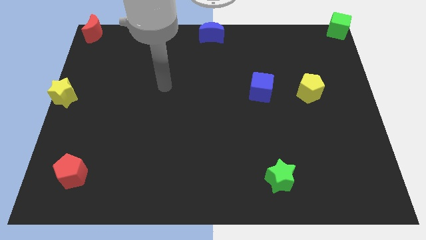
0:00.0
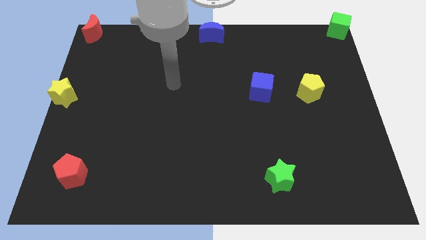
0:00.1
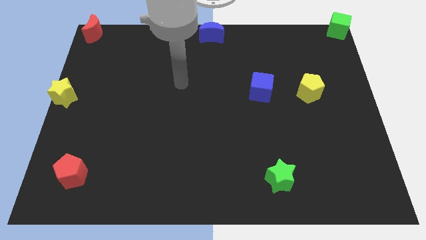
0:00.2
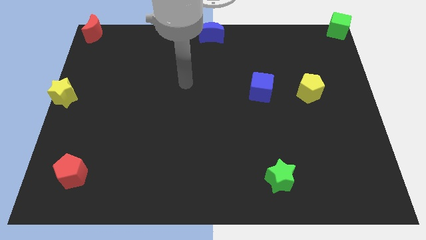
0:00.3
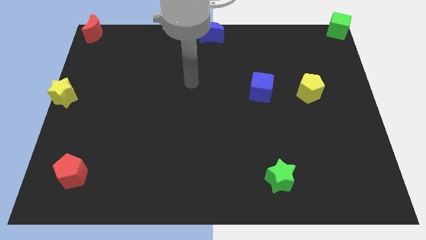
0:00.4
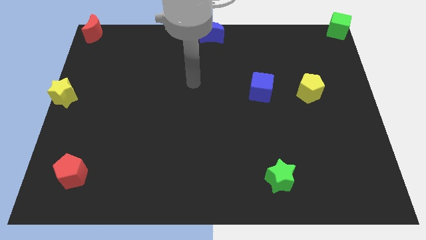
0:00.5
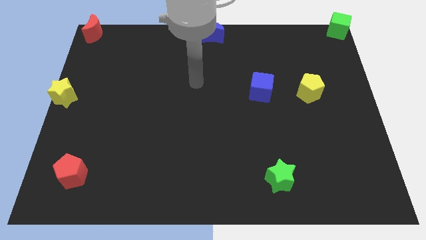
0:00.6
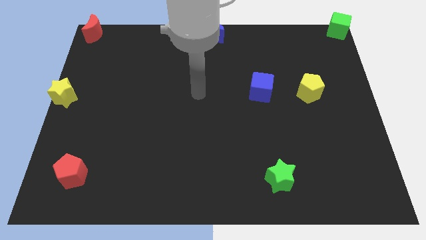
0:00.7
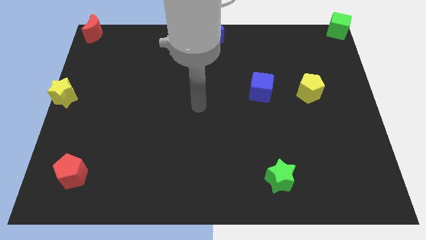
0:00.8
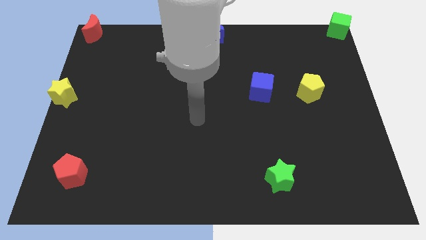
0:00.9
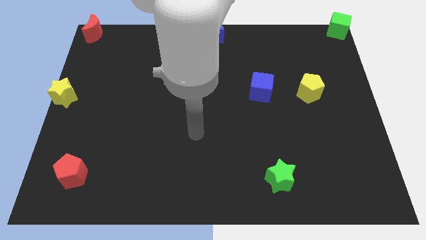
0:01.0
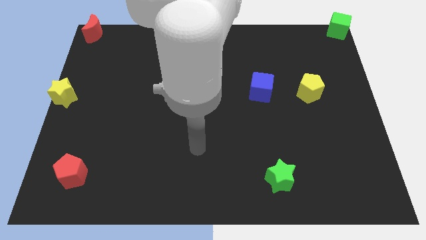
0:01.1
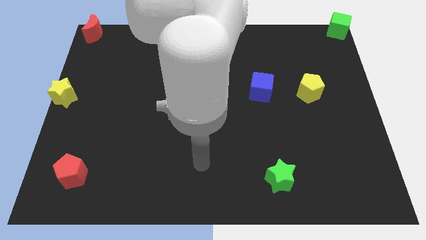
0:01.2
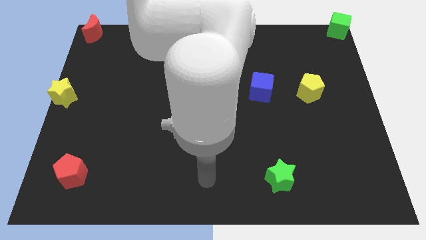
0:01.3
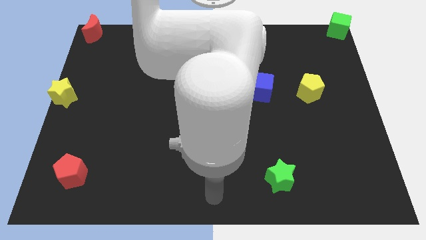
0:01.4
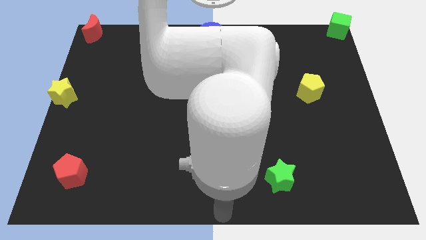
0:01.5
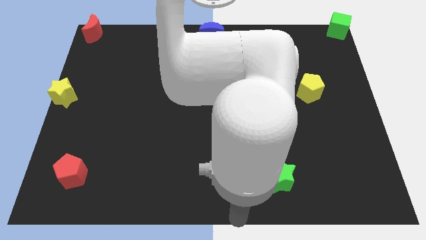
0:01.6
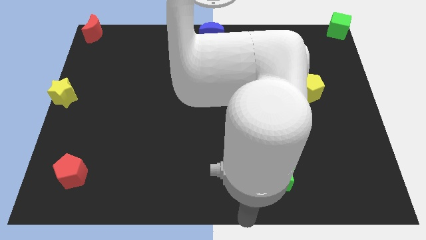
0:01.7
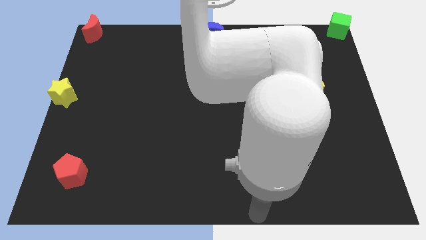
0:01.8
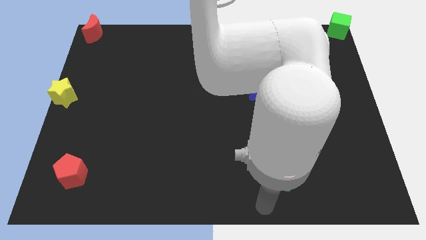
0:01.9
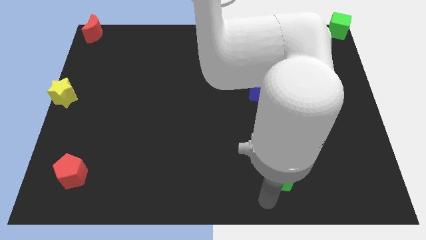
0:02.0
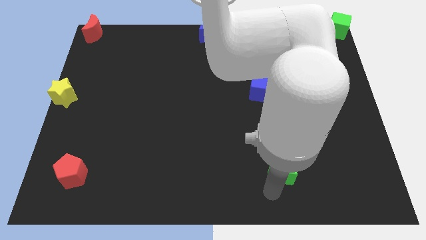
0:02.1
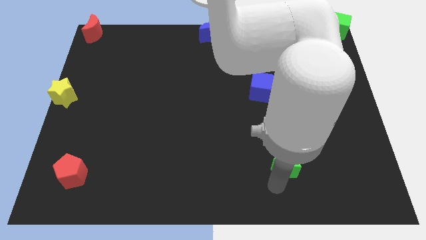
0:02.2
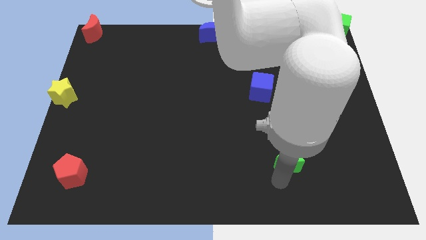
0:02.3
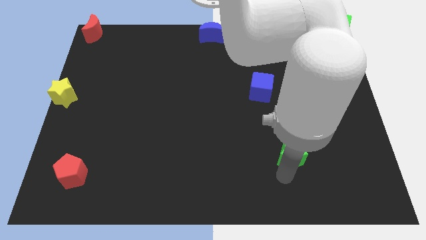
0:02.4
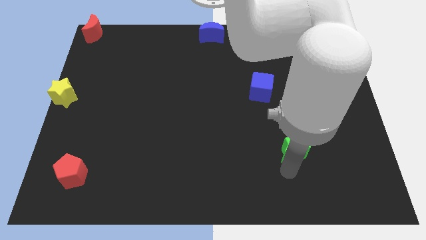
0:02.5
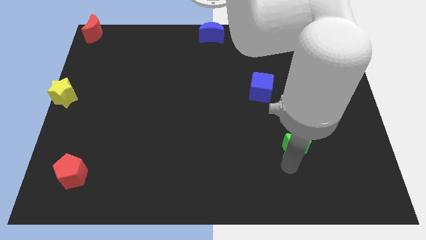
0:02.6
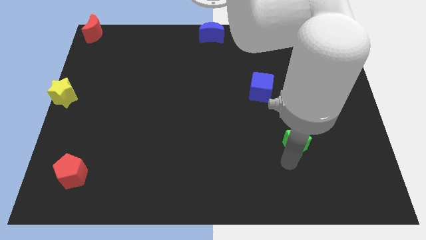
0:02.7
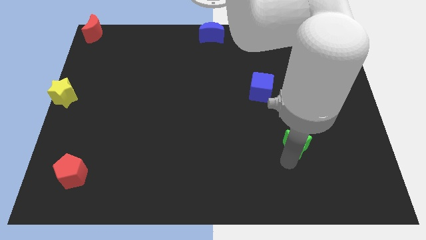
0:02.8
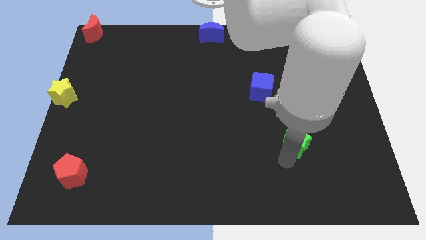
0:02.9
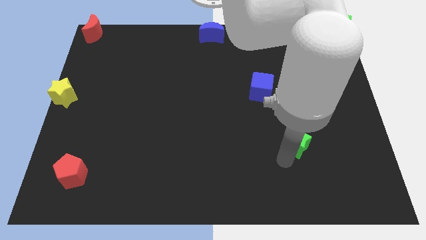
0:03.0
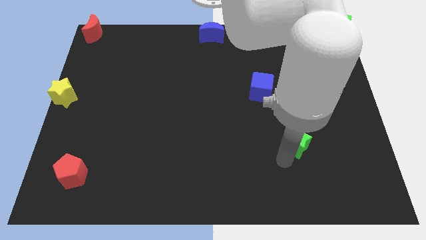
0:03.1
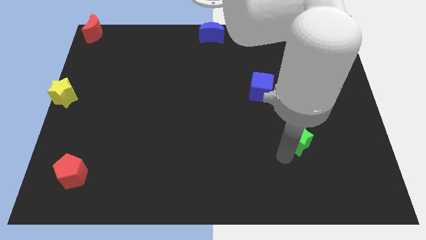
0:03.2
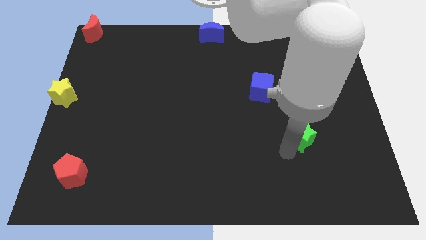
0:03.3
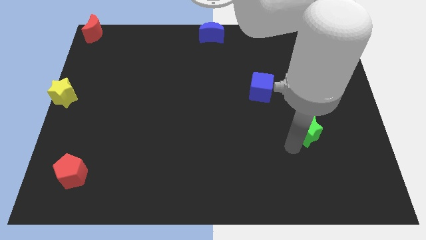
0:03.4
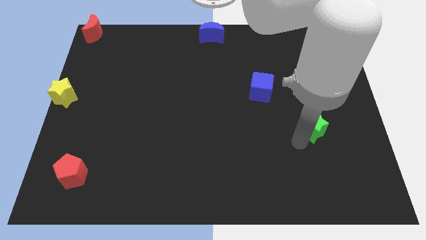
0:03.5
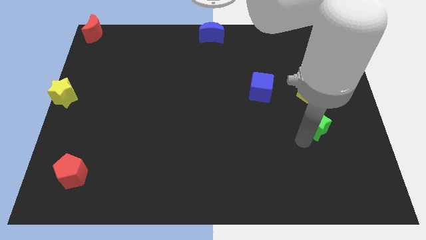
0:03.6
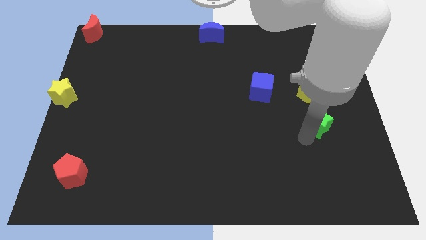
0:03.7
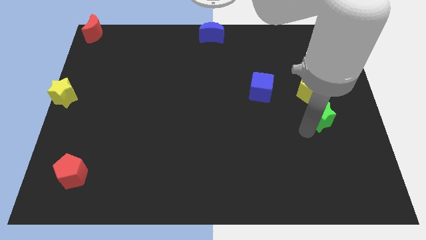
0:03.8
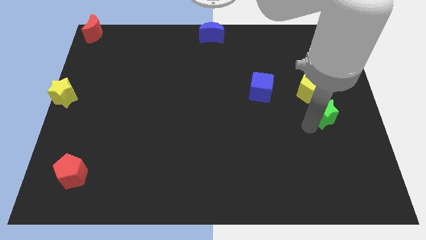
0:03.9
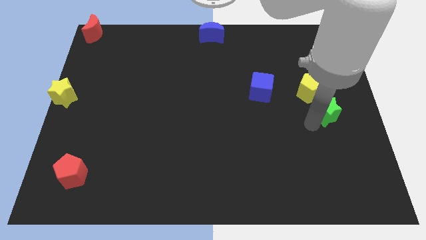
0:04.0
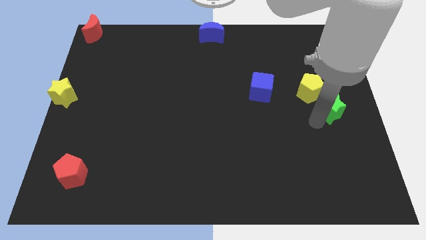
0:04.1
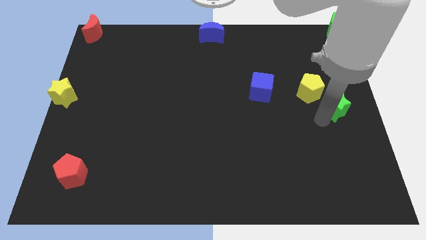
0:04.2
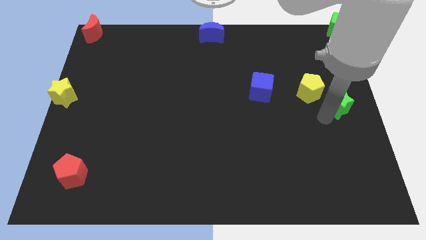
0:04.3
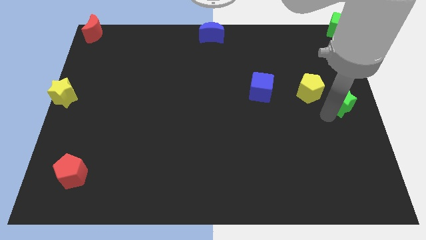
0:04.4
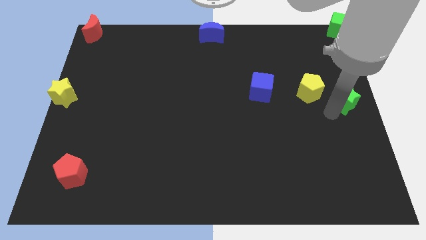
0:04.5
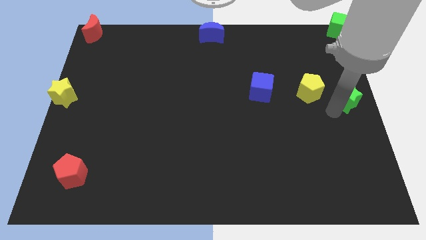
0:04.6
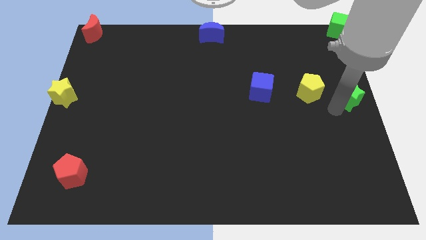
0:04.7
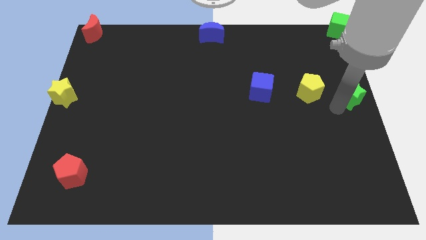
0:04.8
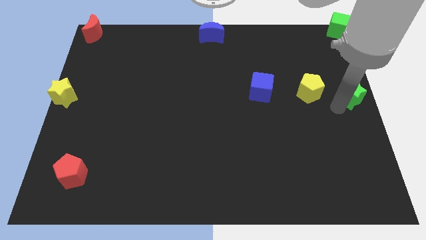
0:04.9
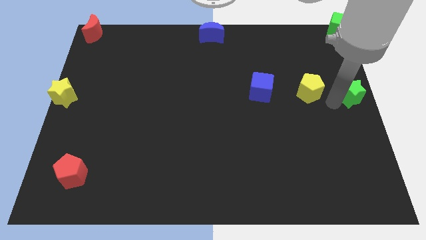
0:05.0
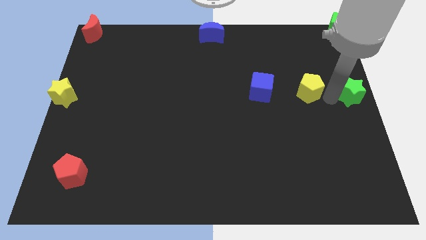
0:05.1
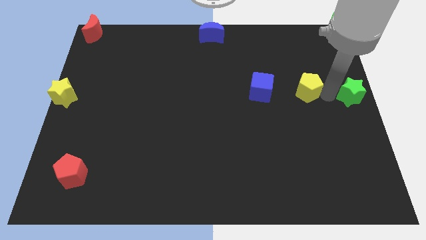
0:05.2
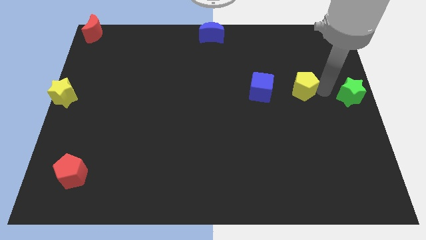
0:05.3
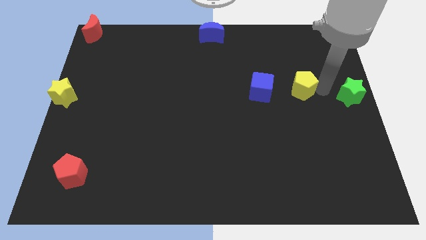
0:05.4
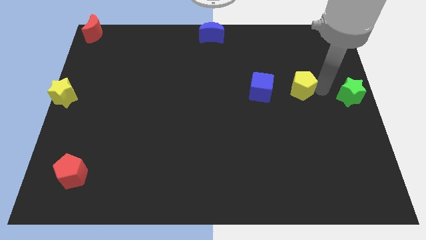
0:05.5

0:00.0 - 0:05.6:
move the green star below the green cube

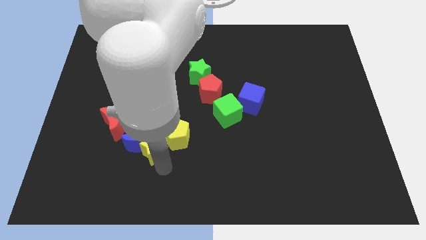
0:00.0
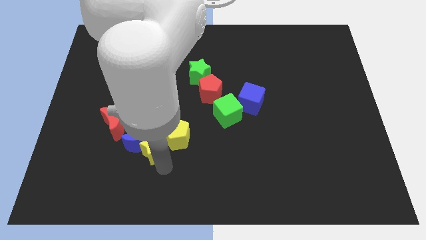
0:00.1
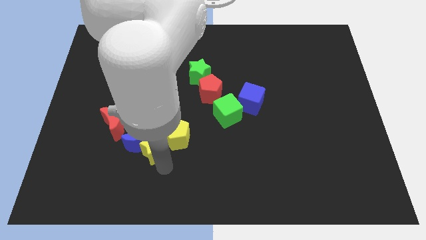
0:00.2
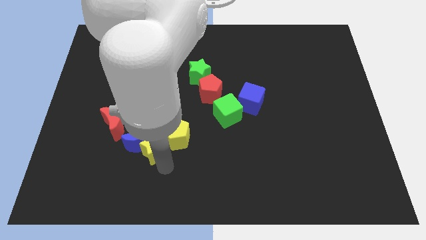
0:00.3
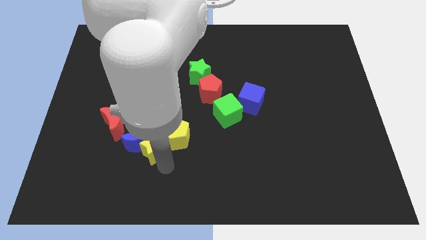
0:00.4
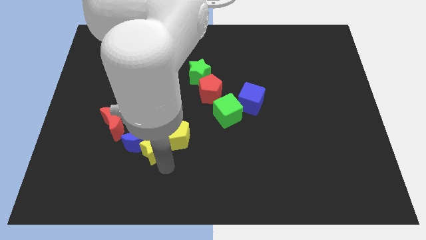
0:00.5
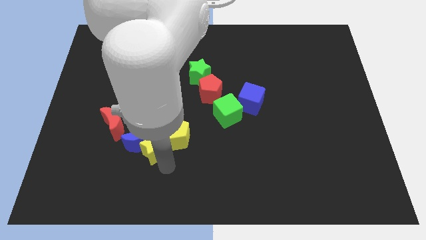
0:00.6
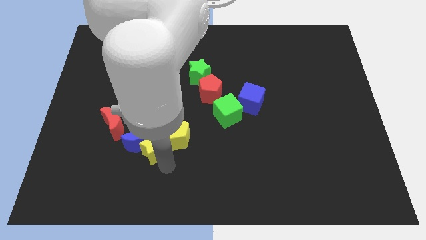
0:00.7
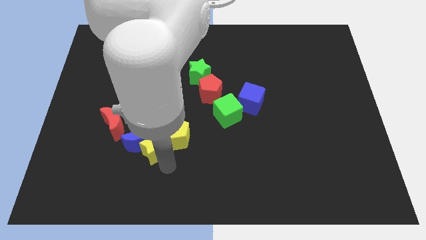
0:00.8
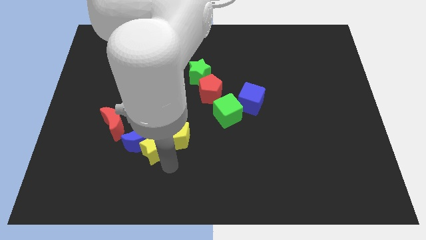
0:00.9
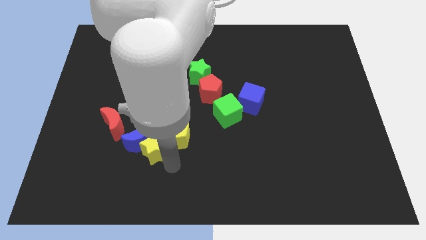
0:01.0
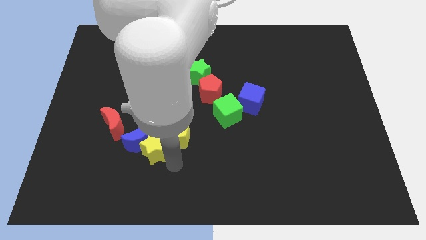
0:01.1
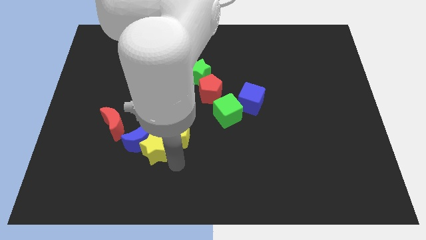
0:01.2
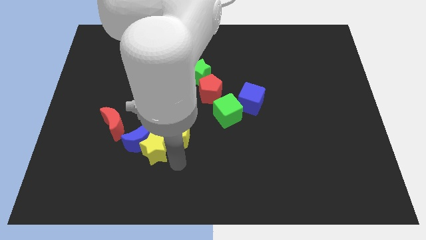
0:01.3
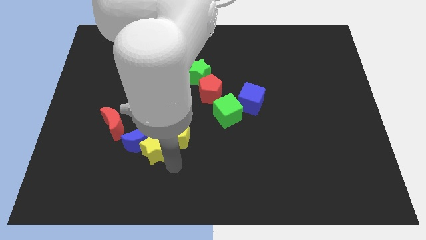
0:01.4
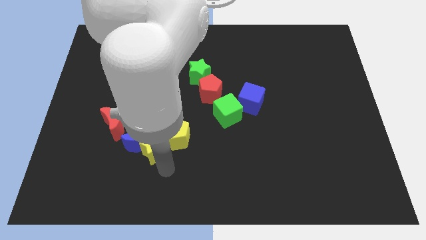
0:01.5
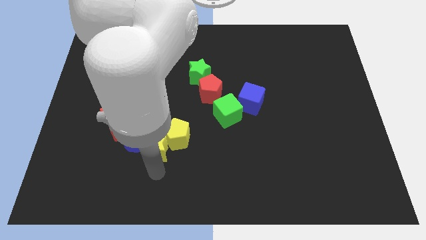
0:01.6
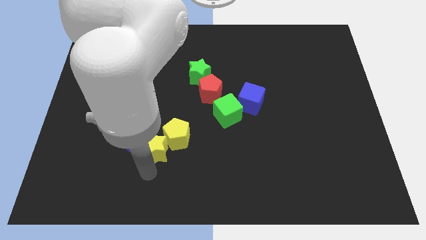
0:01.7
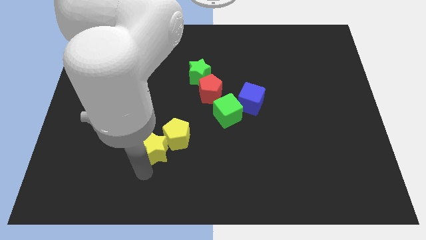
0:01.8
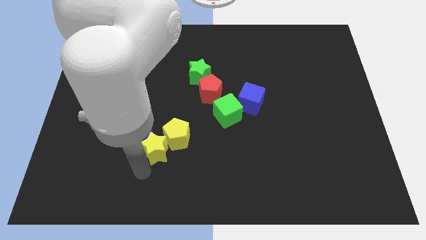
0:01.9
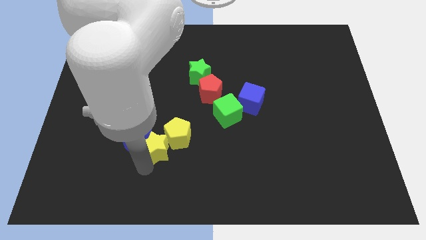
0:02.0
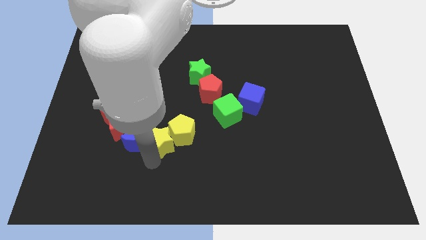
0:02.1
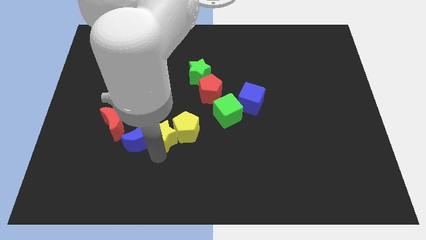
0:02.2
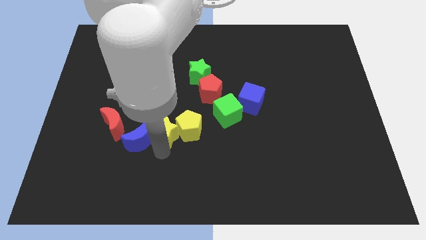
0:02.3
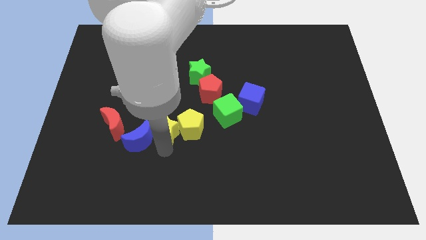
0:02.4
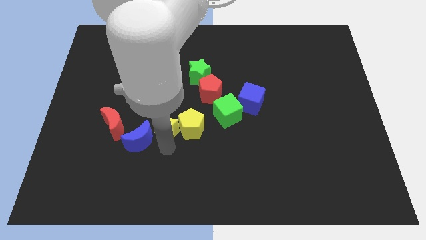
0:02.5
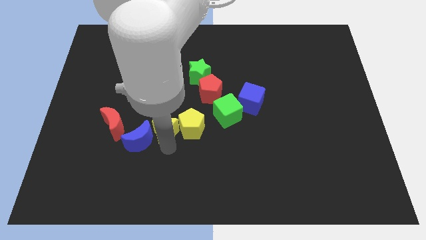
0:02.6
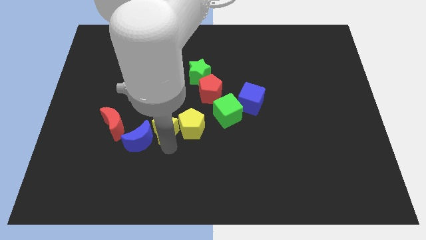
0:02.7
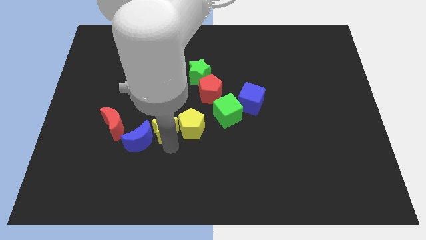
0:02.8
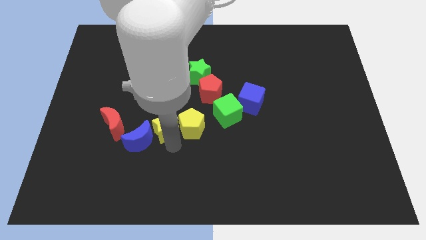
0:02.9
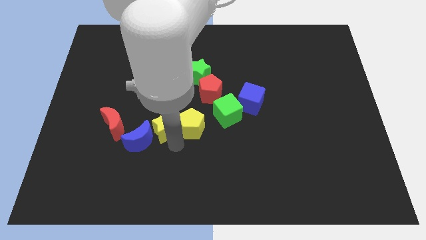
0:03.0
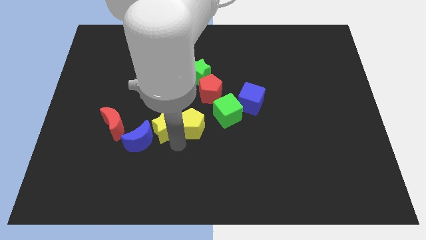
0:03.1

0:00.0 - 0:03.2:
place the yellow star right to the blue crescent

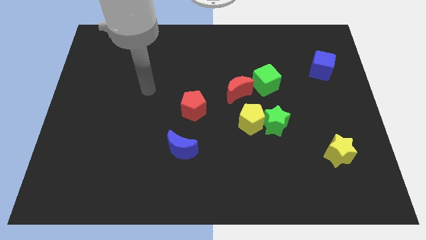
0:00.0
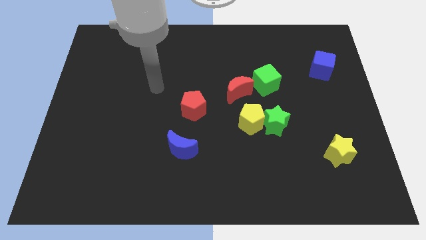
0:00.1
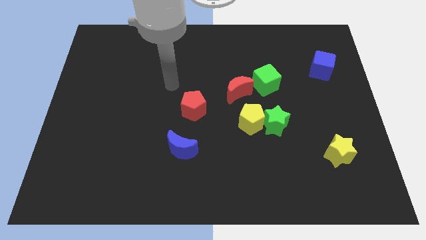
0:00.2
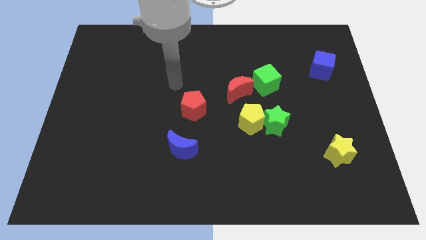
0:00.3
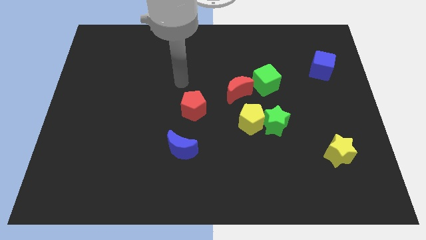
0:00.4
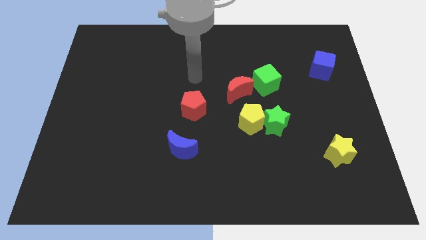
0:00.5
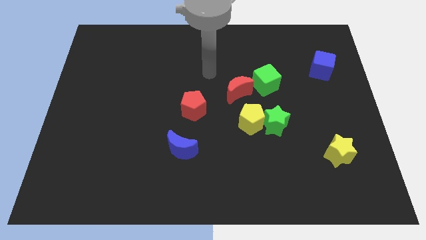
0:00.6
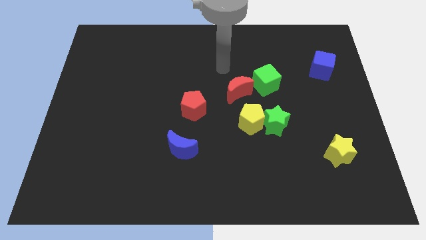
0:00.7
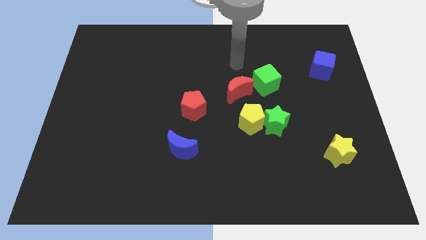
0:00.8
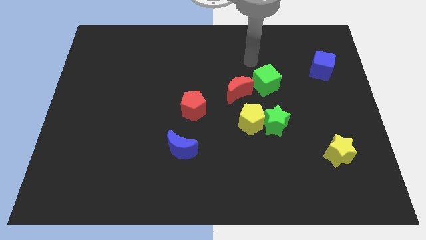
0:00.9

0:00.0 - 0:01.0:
place your arm at the top of red moon
